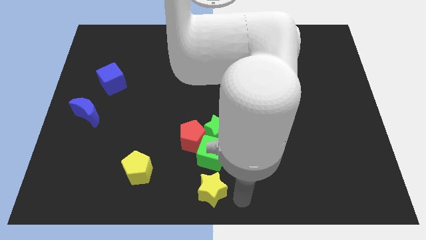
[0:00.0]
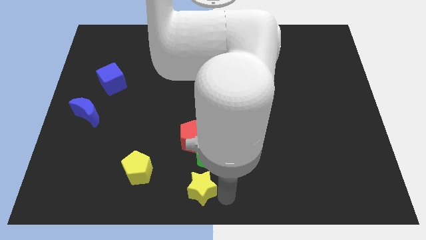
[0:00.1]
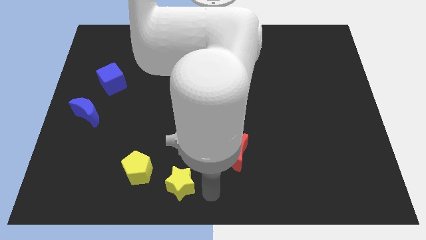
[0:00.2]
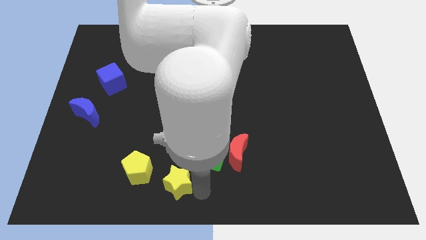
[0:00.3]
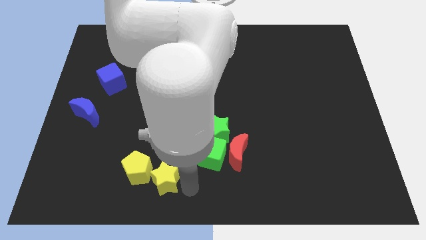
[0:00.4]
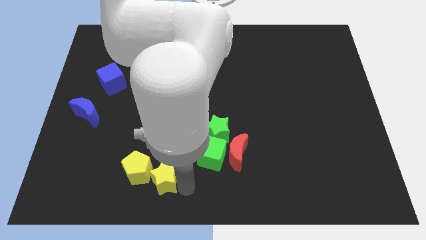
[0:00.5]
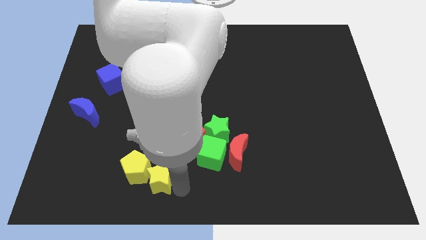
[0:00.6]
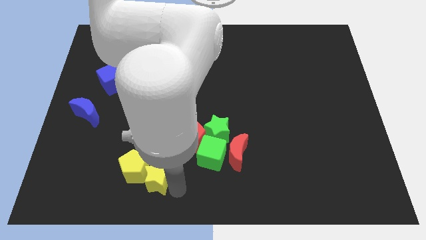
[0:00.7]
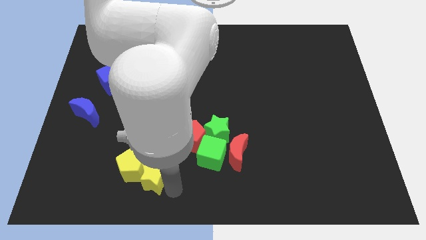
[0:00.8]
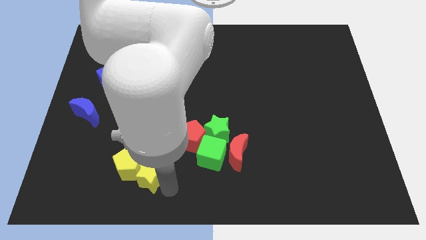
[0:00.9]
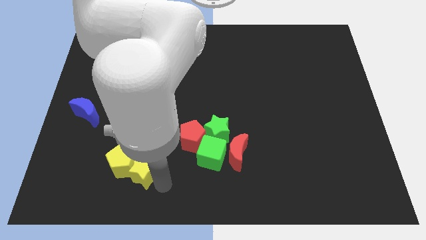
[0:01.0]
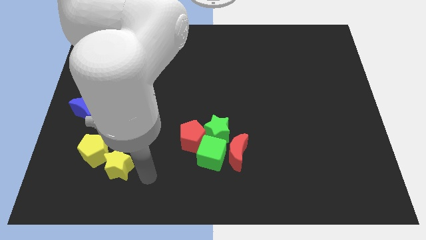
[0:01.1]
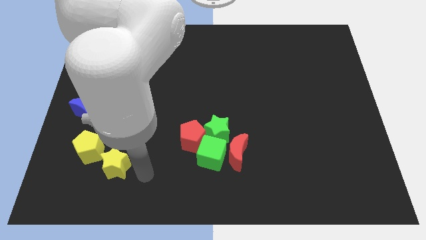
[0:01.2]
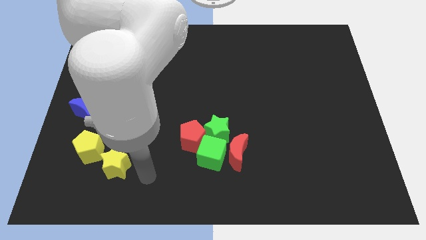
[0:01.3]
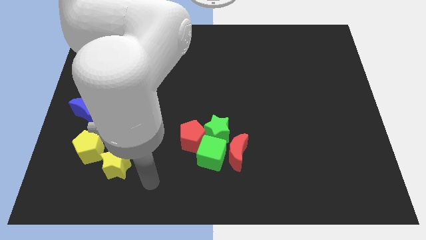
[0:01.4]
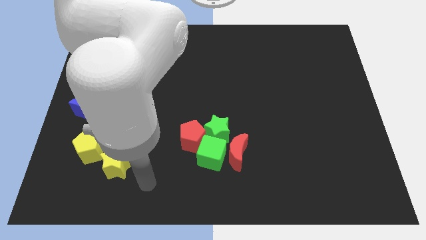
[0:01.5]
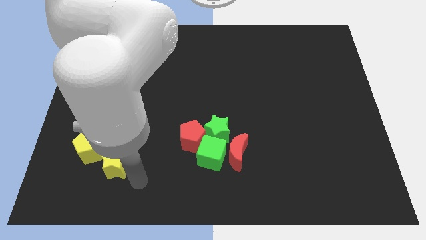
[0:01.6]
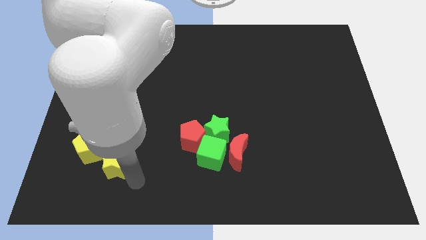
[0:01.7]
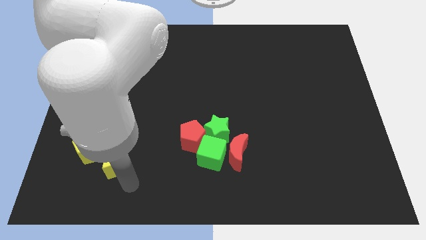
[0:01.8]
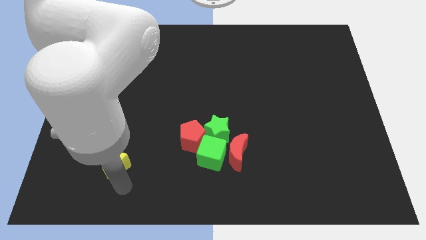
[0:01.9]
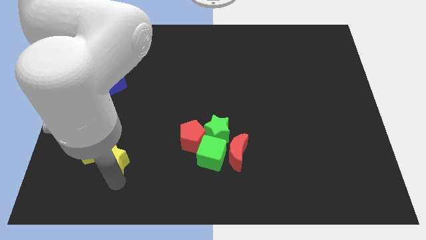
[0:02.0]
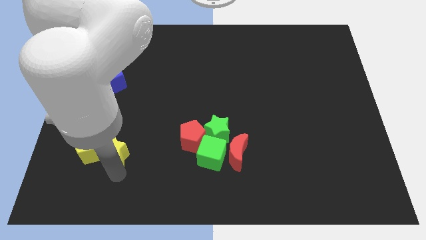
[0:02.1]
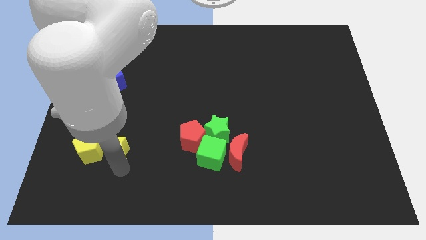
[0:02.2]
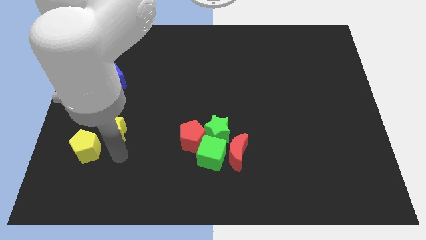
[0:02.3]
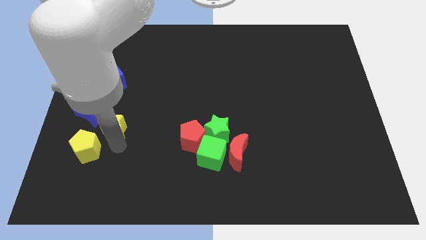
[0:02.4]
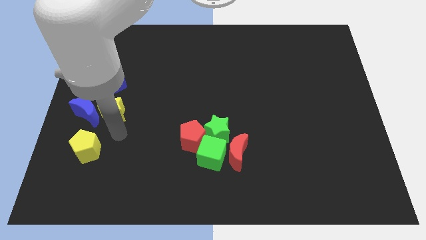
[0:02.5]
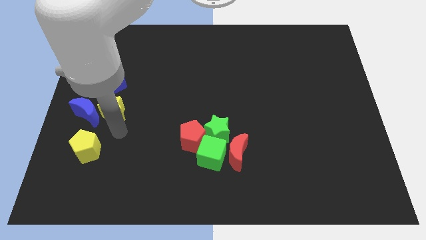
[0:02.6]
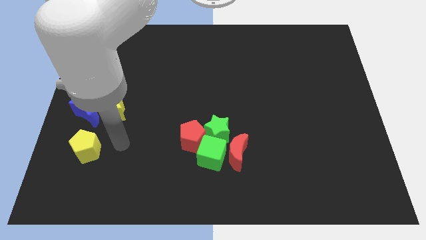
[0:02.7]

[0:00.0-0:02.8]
move the yellow star towards the blue cube

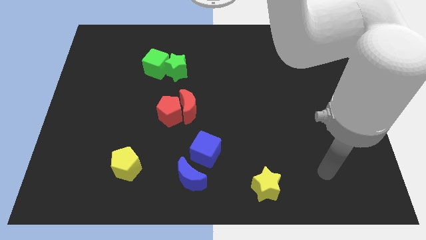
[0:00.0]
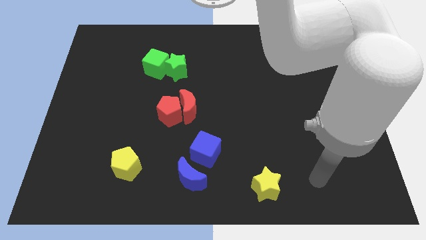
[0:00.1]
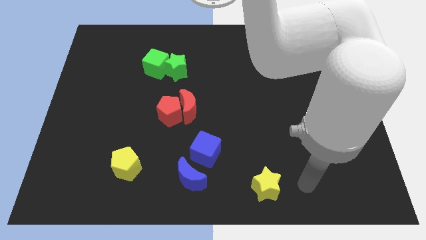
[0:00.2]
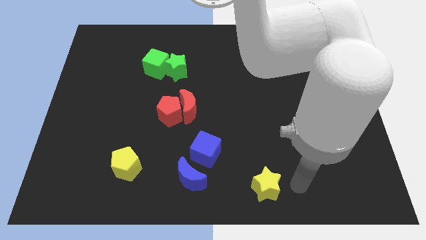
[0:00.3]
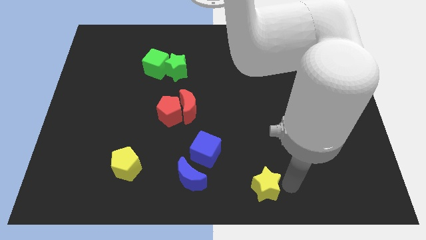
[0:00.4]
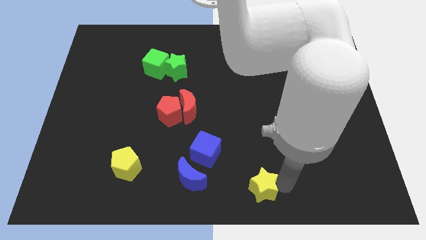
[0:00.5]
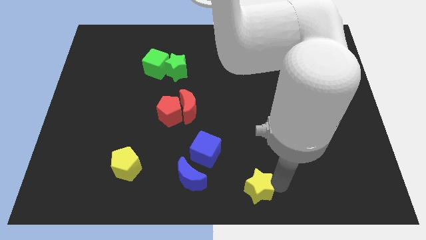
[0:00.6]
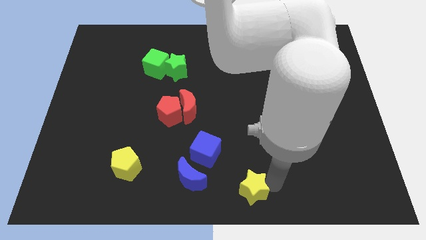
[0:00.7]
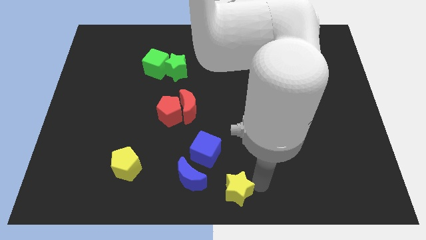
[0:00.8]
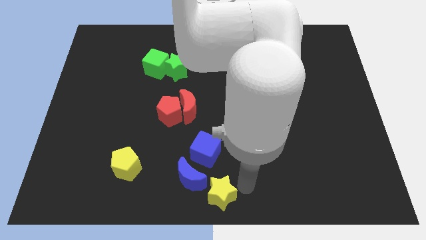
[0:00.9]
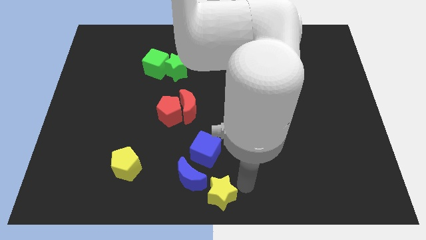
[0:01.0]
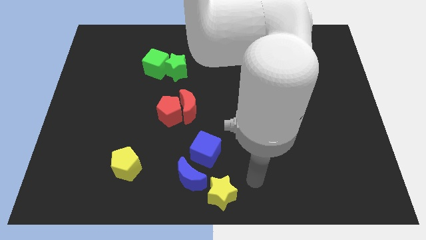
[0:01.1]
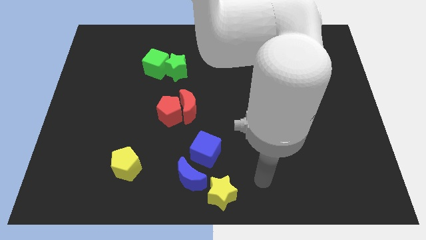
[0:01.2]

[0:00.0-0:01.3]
move the yellow star close to the blue crescent

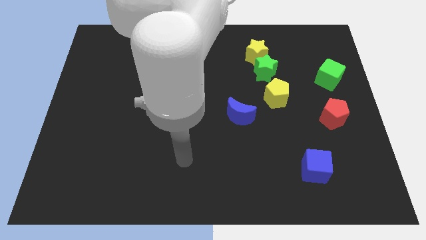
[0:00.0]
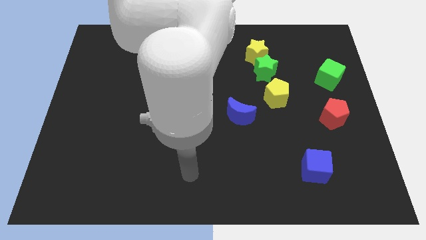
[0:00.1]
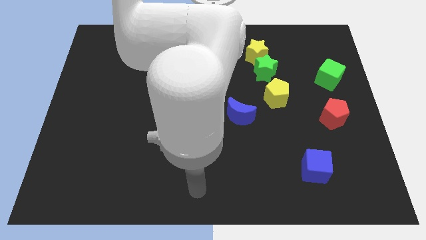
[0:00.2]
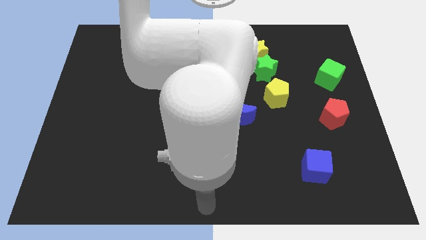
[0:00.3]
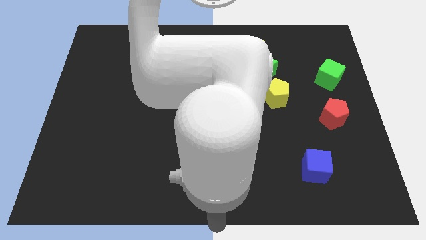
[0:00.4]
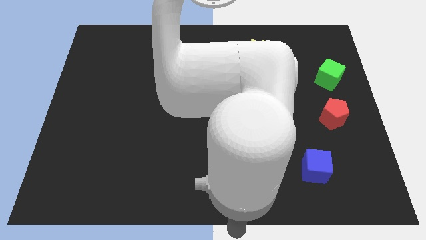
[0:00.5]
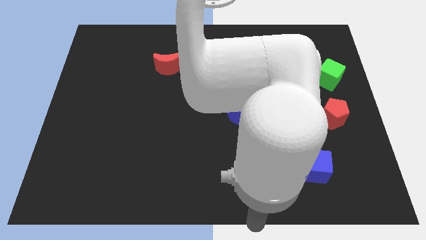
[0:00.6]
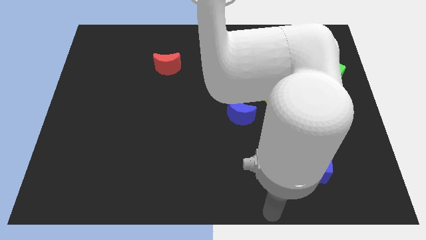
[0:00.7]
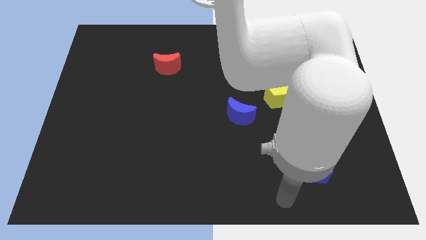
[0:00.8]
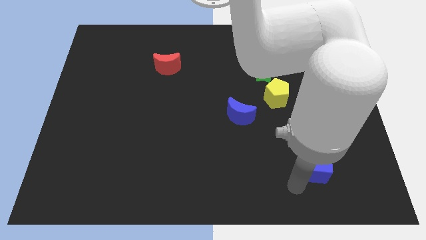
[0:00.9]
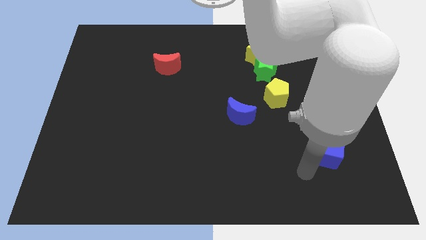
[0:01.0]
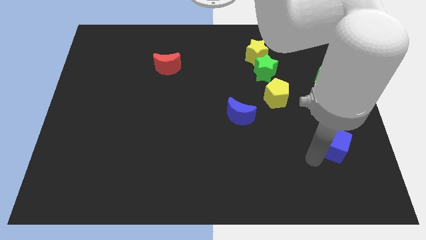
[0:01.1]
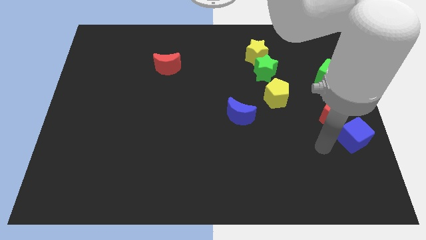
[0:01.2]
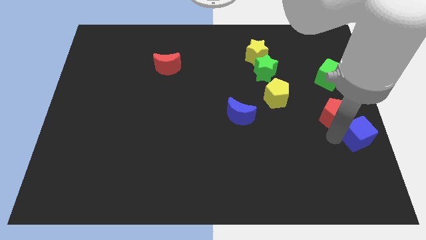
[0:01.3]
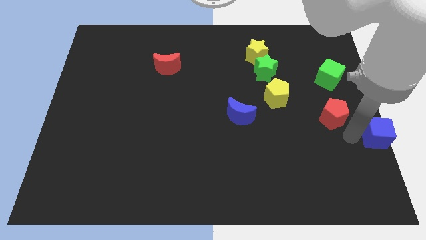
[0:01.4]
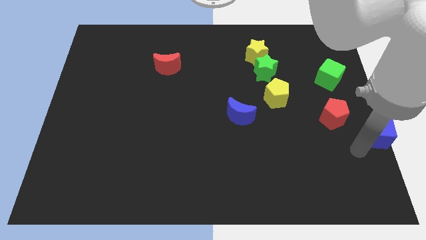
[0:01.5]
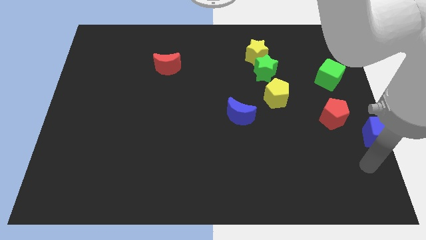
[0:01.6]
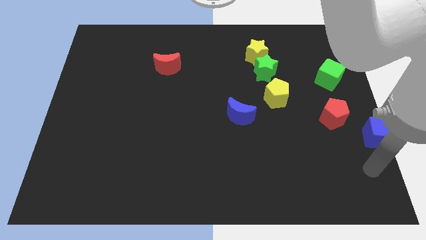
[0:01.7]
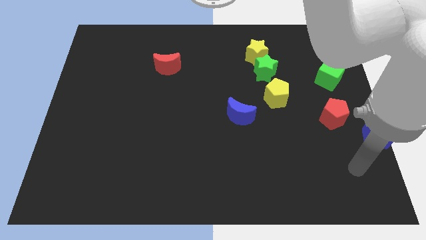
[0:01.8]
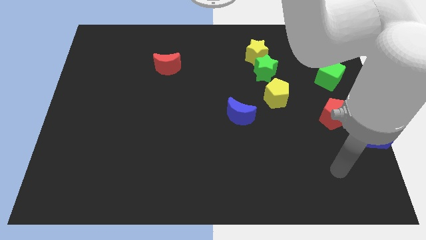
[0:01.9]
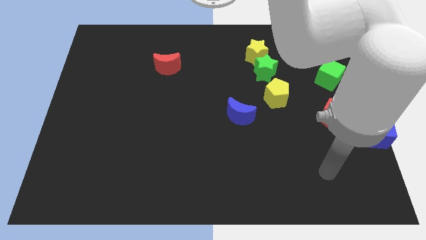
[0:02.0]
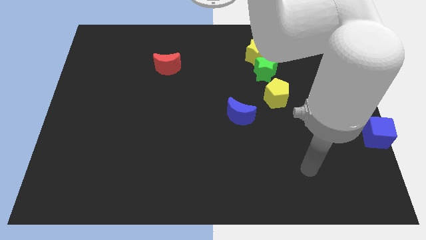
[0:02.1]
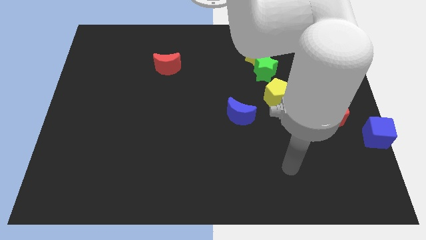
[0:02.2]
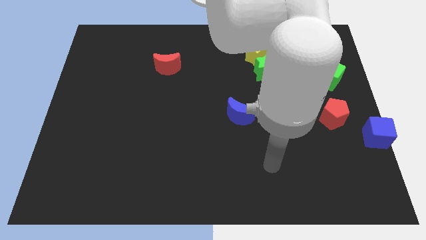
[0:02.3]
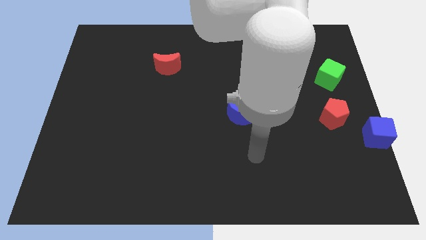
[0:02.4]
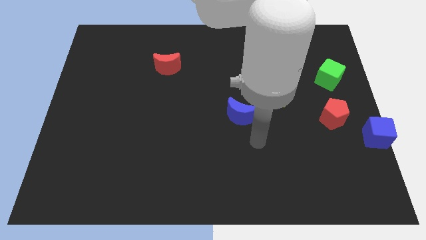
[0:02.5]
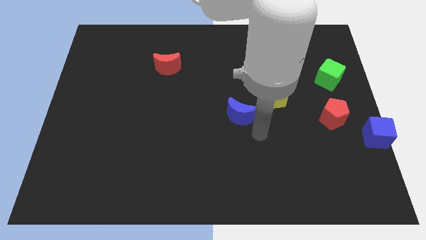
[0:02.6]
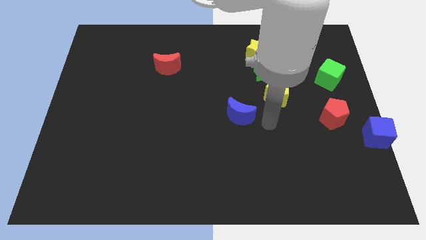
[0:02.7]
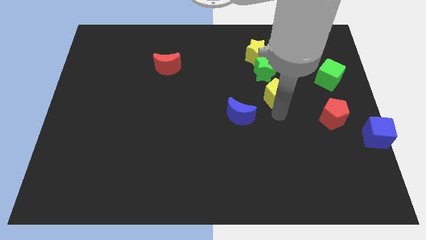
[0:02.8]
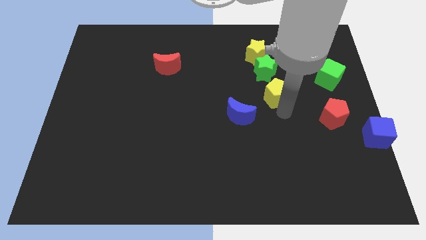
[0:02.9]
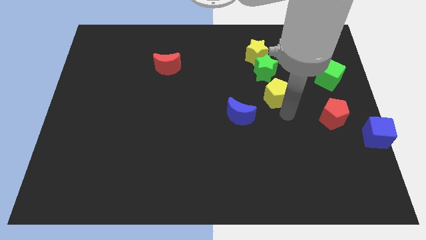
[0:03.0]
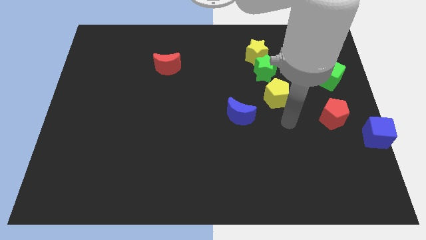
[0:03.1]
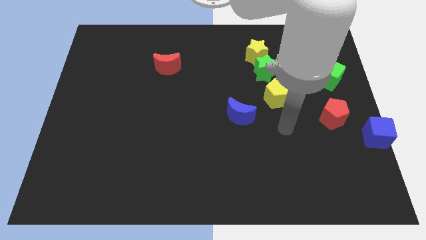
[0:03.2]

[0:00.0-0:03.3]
place the blue cube diagonally bottom right to the red pentagon

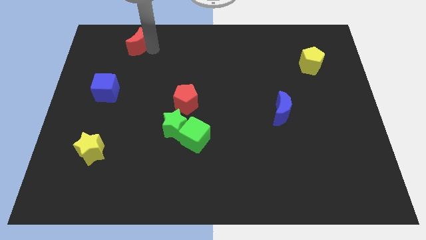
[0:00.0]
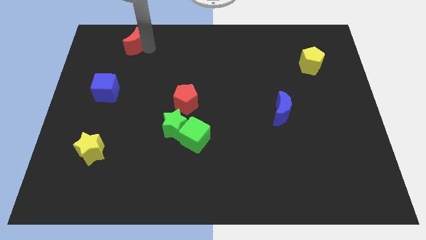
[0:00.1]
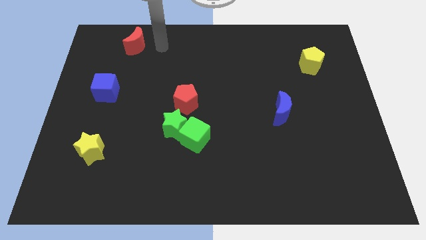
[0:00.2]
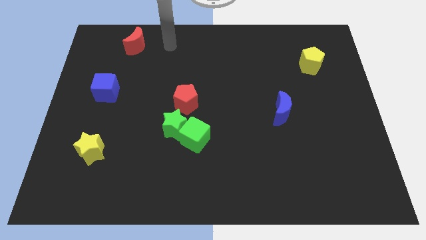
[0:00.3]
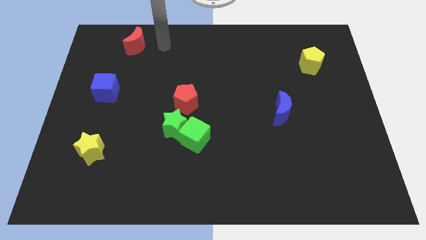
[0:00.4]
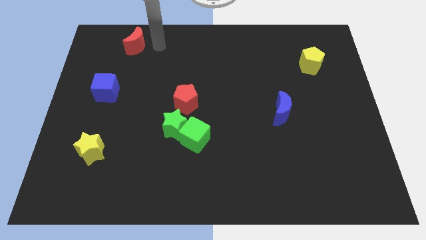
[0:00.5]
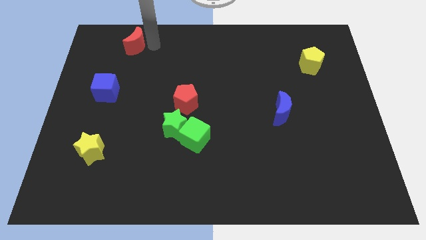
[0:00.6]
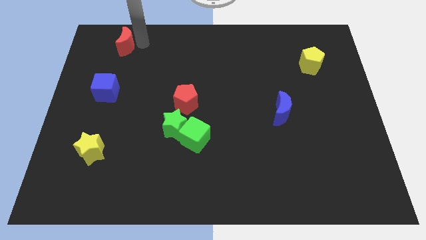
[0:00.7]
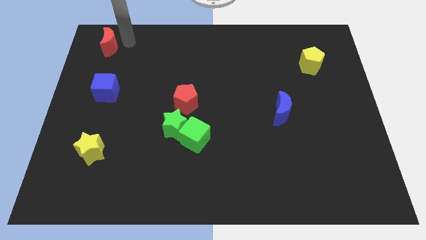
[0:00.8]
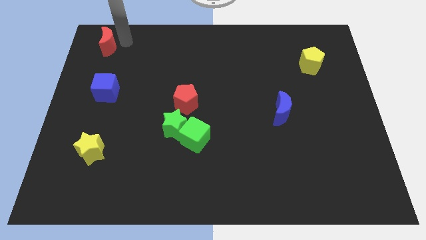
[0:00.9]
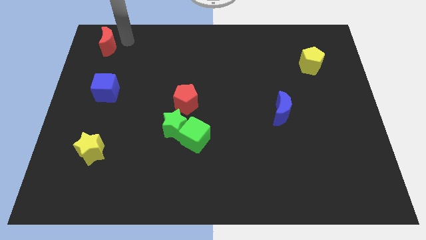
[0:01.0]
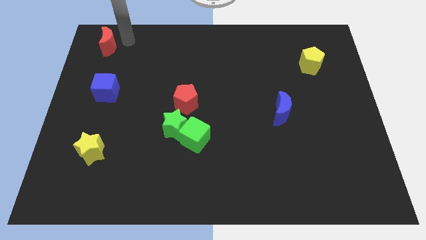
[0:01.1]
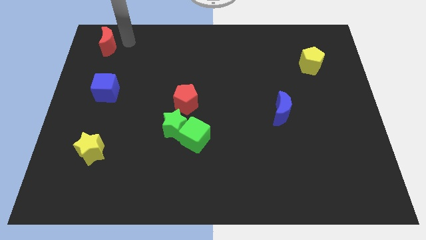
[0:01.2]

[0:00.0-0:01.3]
move the red moon above the blue cube

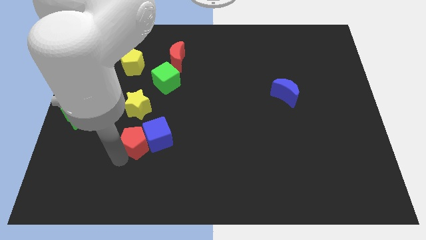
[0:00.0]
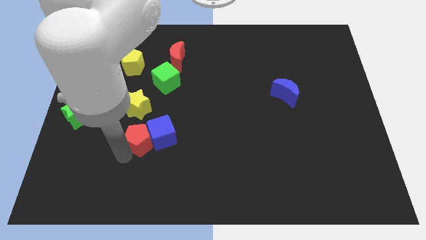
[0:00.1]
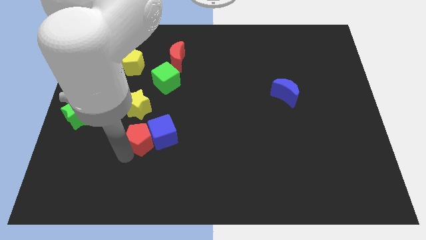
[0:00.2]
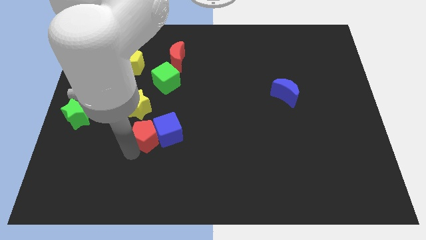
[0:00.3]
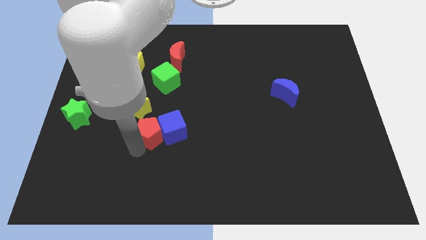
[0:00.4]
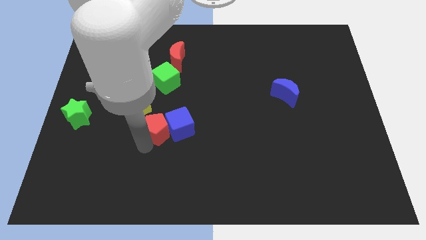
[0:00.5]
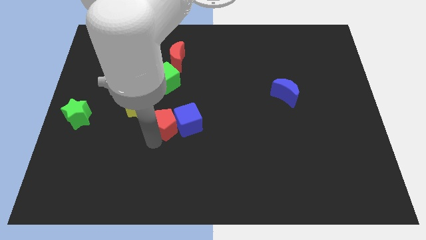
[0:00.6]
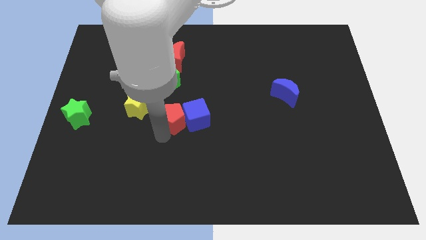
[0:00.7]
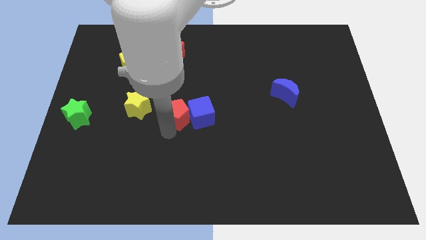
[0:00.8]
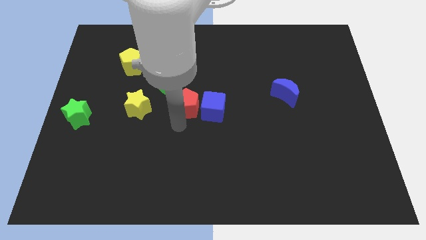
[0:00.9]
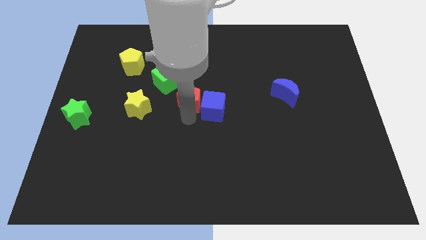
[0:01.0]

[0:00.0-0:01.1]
move the red pentagon and blue cube at the center of the table
